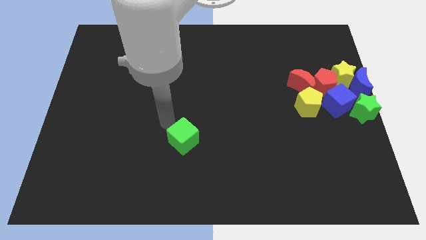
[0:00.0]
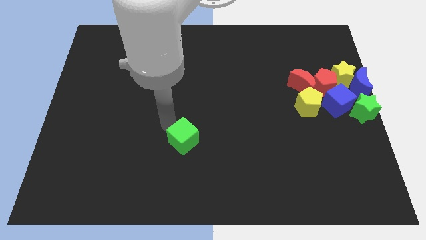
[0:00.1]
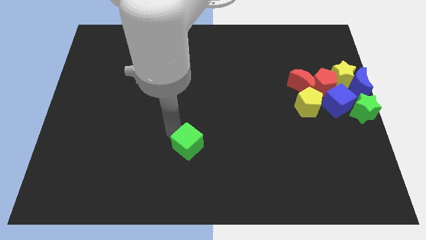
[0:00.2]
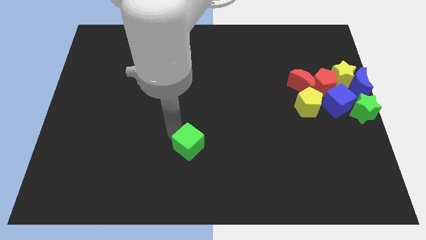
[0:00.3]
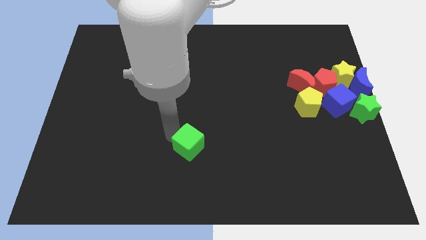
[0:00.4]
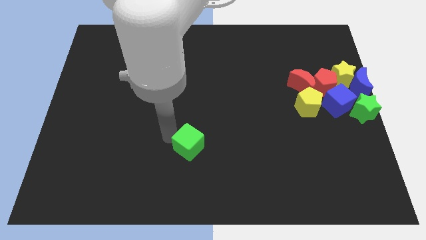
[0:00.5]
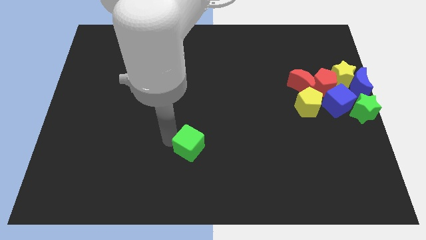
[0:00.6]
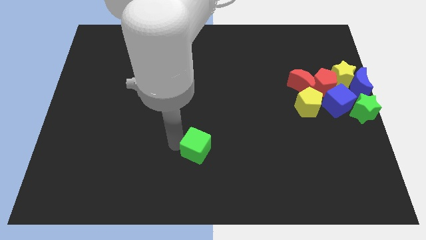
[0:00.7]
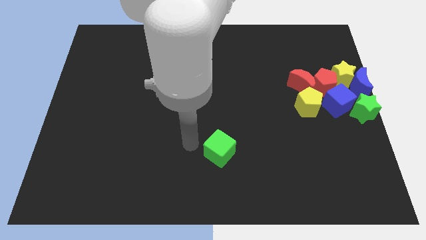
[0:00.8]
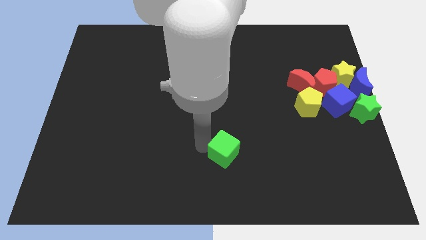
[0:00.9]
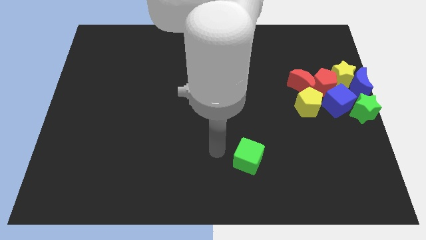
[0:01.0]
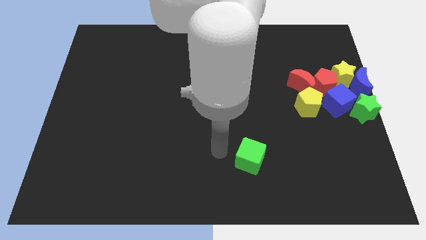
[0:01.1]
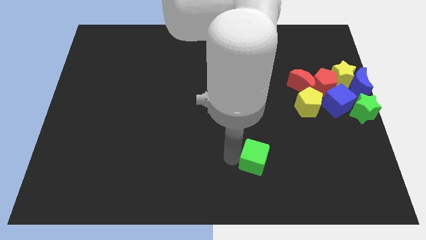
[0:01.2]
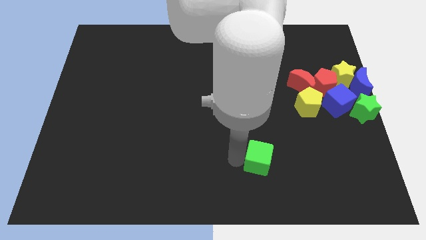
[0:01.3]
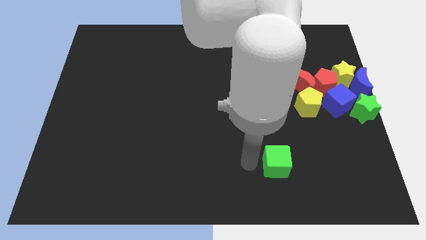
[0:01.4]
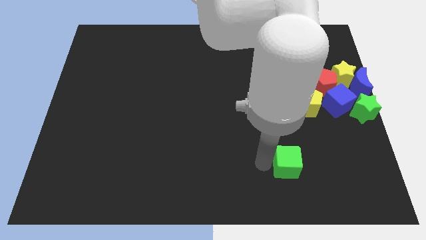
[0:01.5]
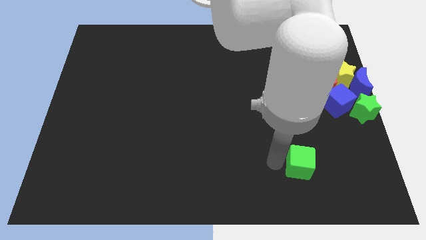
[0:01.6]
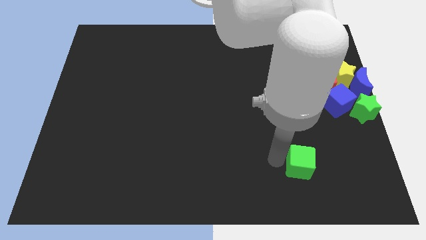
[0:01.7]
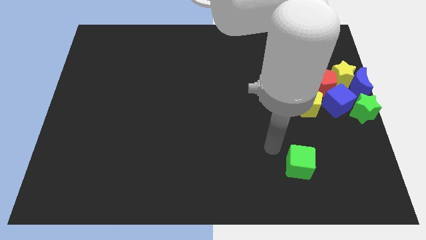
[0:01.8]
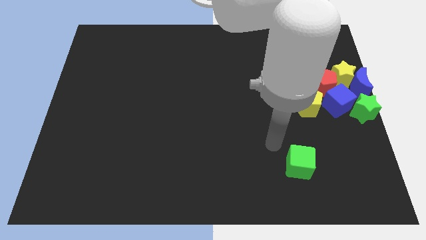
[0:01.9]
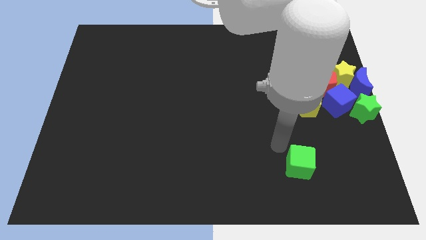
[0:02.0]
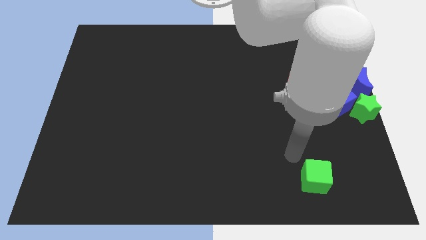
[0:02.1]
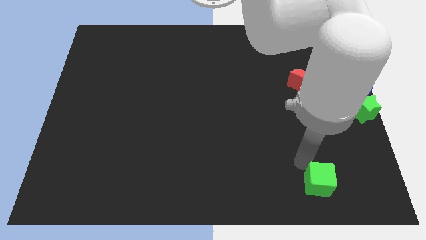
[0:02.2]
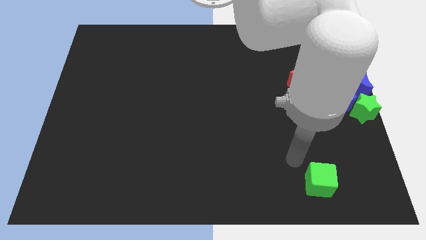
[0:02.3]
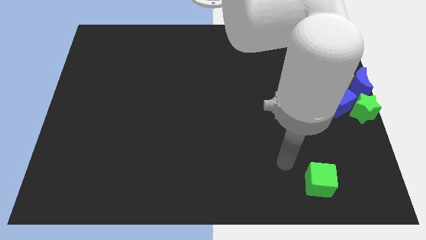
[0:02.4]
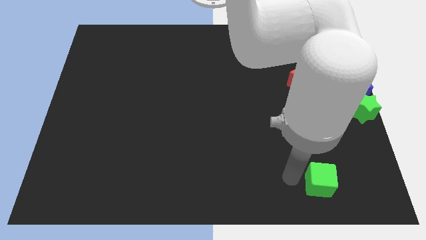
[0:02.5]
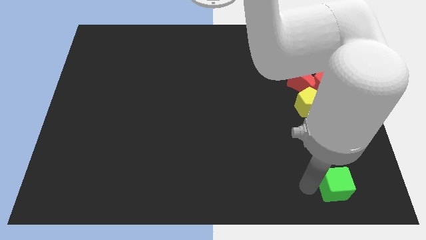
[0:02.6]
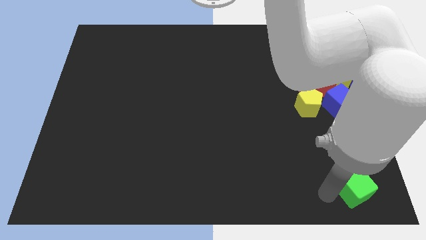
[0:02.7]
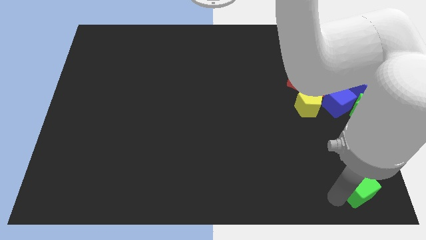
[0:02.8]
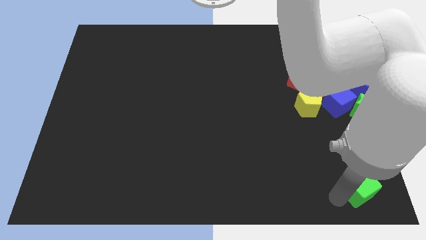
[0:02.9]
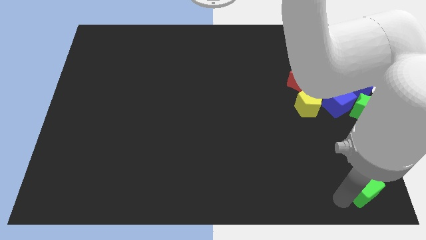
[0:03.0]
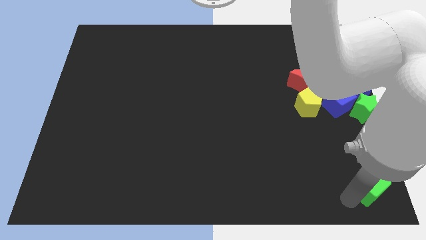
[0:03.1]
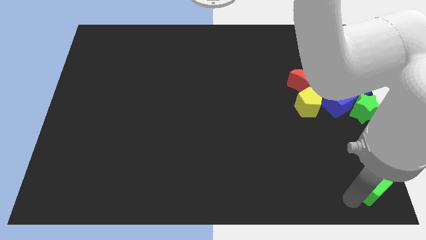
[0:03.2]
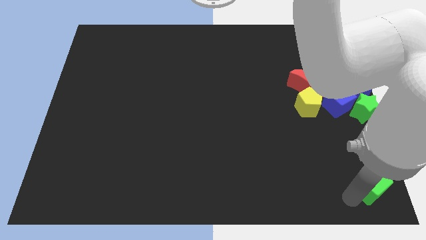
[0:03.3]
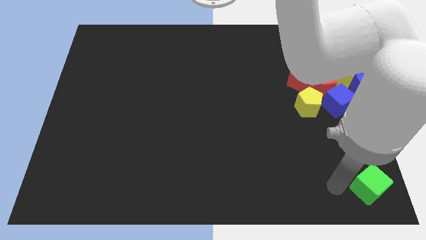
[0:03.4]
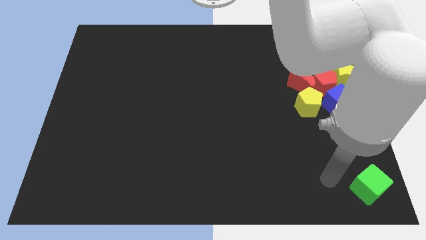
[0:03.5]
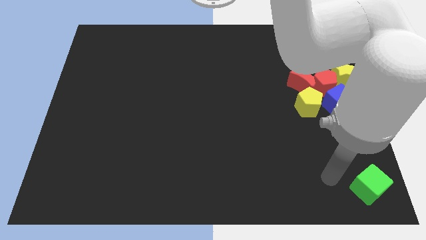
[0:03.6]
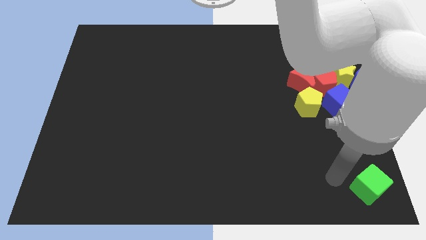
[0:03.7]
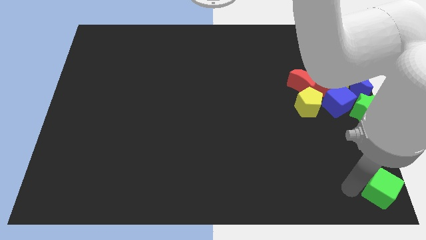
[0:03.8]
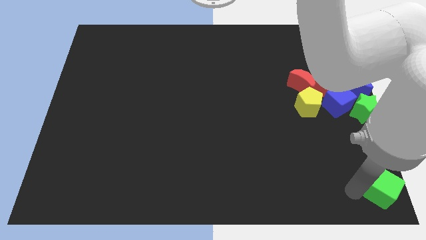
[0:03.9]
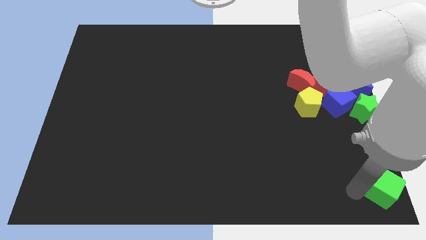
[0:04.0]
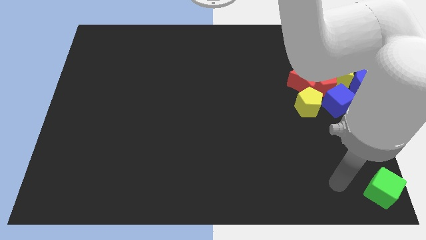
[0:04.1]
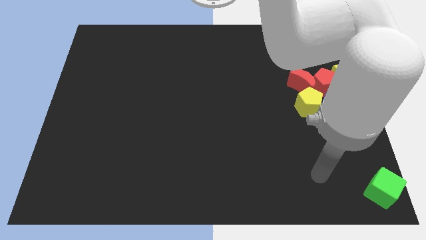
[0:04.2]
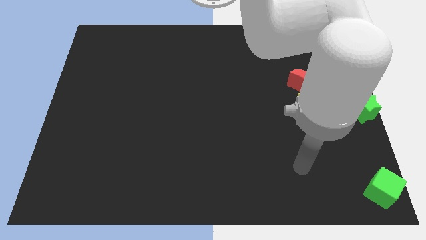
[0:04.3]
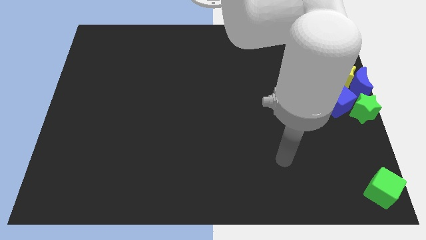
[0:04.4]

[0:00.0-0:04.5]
push the green cube to the bottom right corner of the board

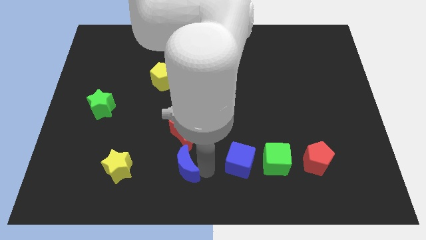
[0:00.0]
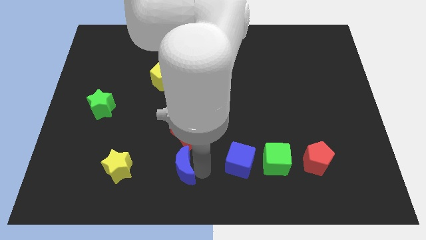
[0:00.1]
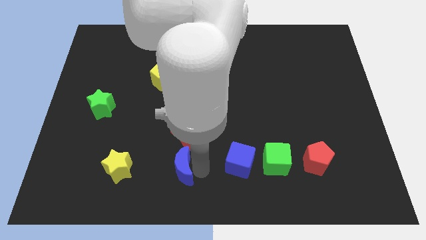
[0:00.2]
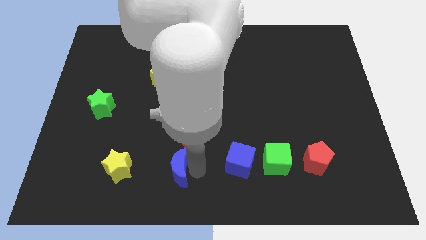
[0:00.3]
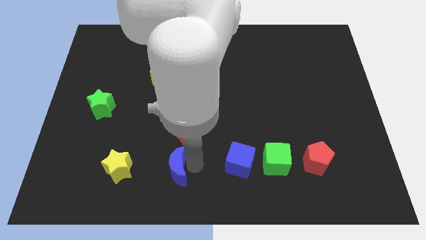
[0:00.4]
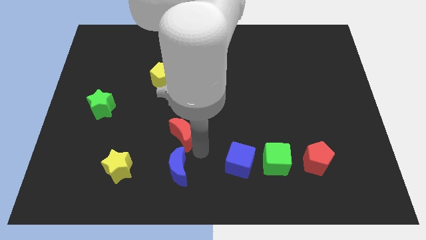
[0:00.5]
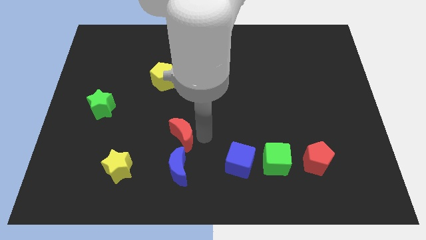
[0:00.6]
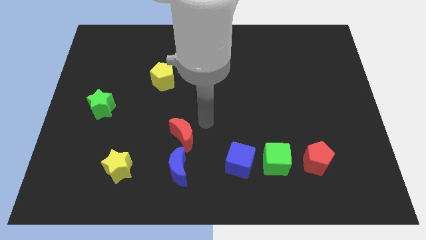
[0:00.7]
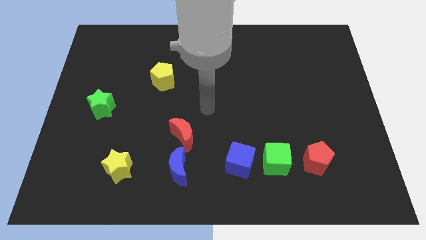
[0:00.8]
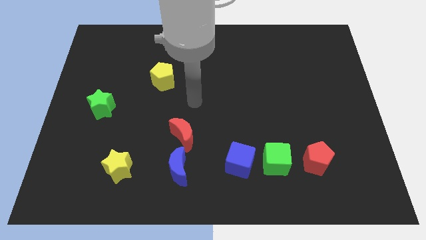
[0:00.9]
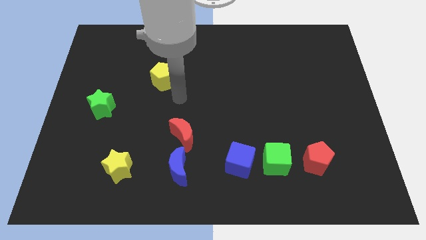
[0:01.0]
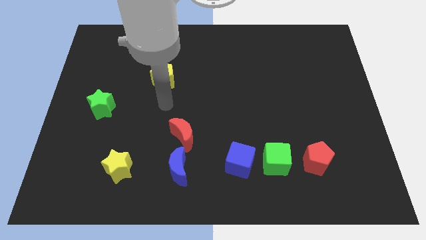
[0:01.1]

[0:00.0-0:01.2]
place the blue crescent to the bottom of the red crescent

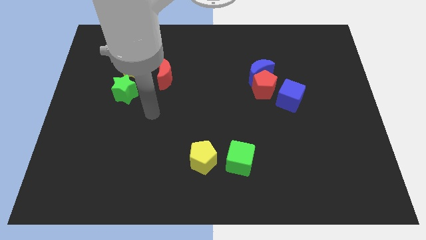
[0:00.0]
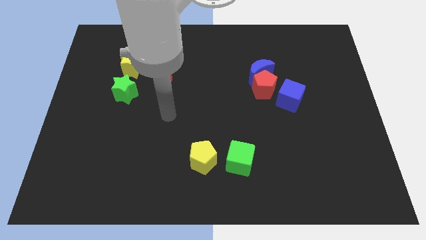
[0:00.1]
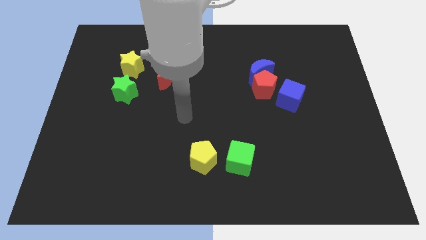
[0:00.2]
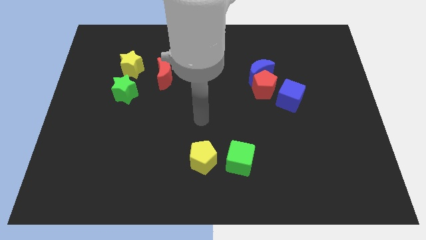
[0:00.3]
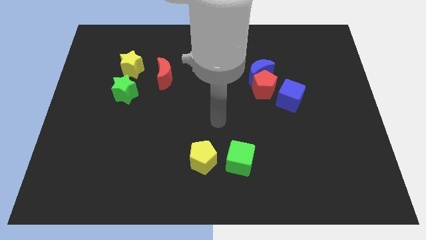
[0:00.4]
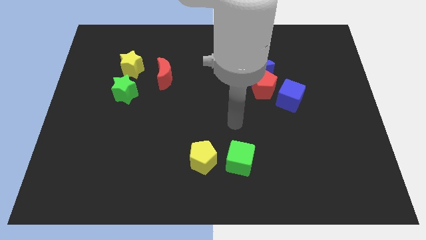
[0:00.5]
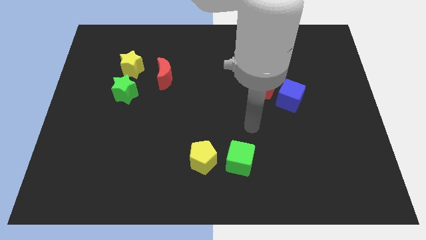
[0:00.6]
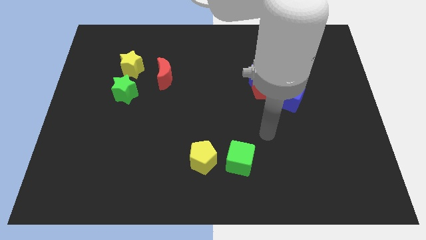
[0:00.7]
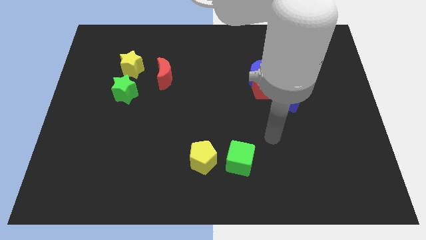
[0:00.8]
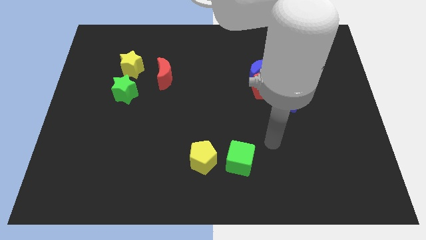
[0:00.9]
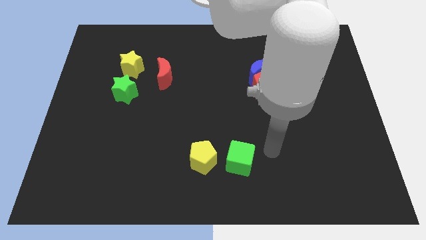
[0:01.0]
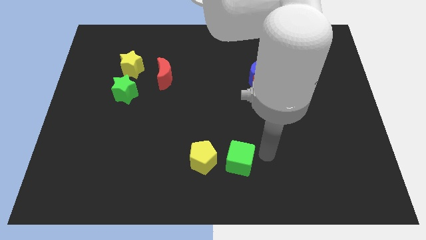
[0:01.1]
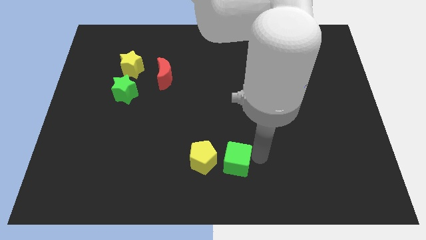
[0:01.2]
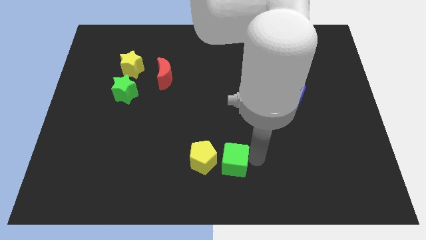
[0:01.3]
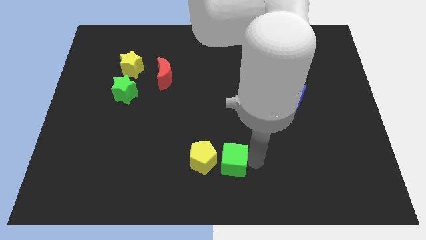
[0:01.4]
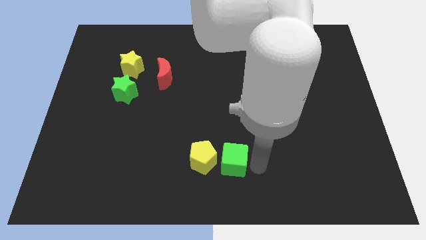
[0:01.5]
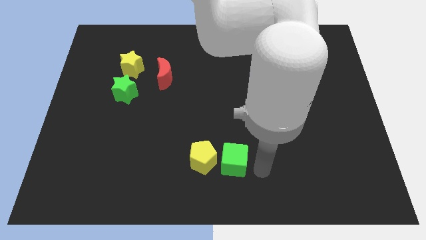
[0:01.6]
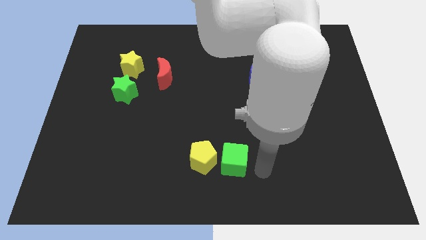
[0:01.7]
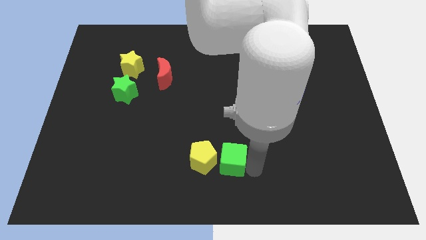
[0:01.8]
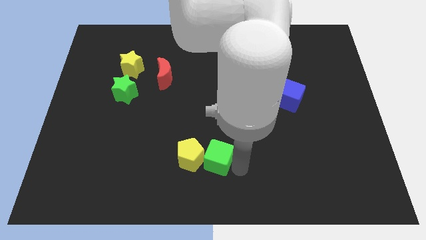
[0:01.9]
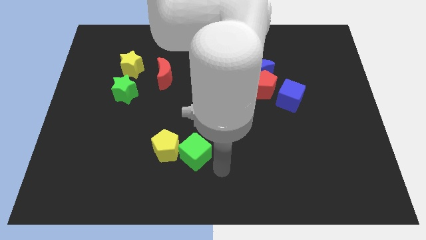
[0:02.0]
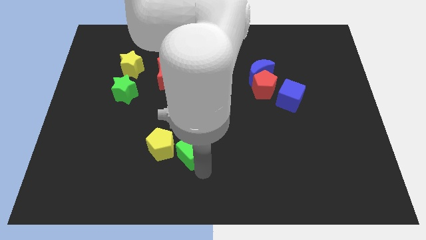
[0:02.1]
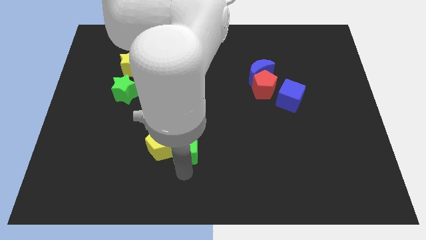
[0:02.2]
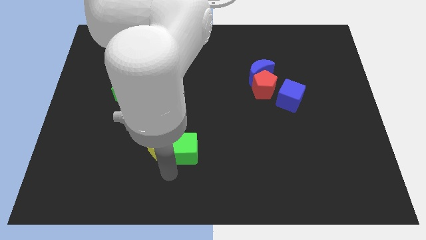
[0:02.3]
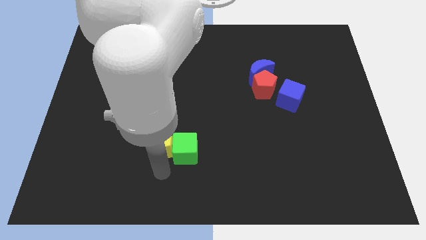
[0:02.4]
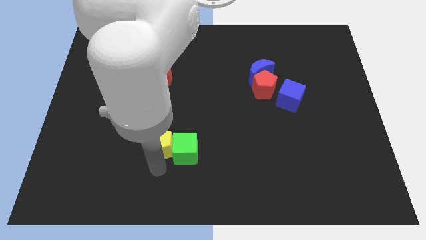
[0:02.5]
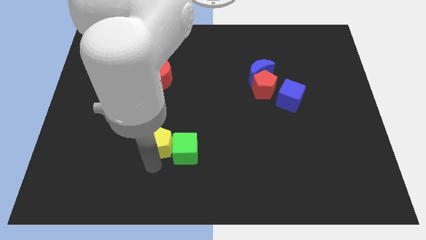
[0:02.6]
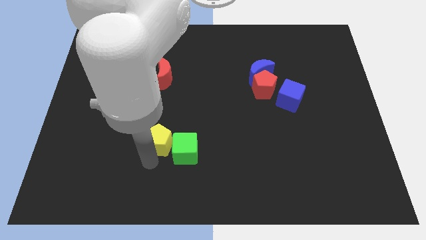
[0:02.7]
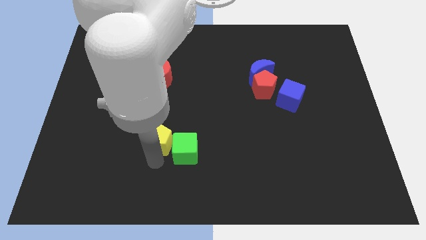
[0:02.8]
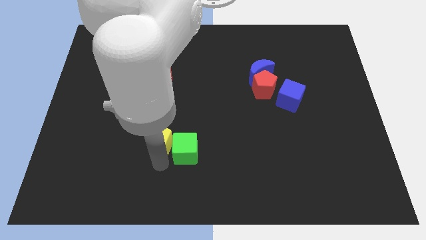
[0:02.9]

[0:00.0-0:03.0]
slide green cube into the yellow pentagon

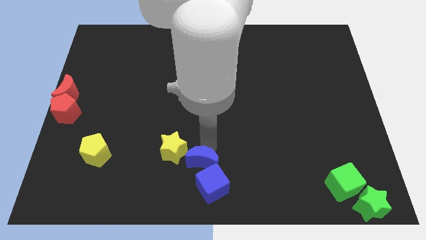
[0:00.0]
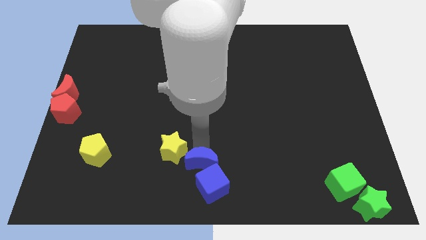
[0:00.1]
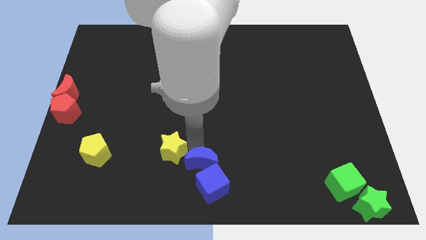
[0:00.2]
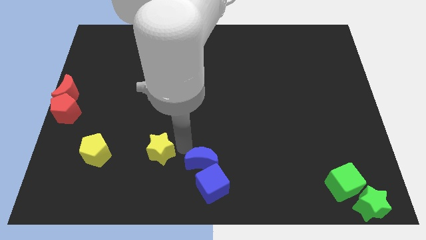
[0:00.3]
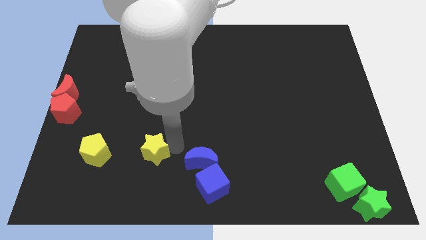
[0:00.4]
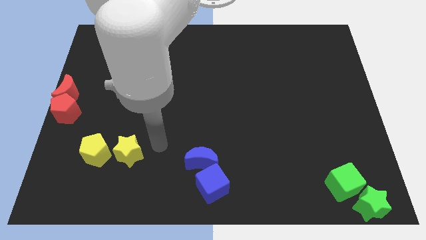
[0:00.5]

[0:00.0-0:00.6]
separate the blue moon and yellow star
